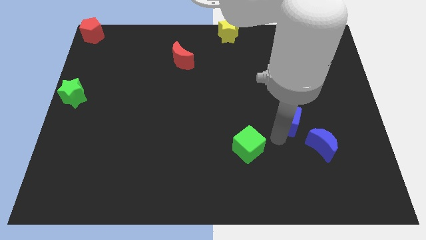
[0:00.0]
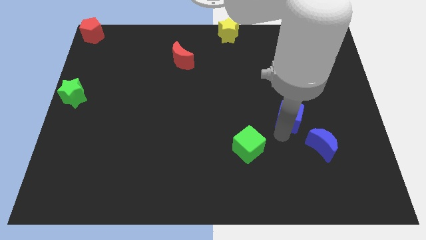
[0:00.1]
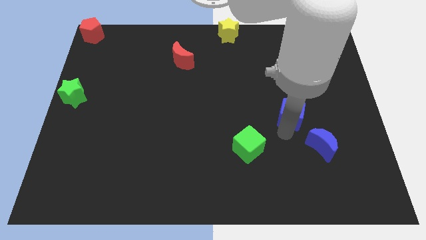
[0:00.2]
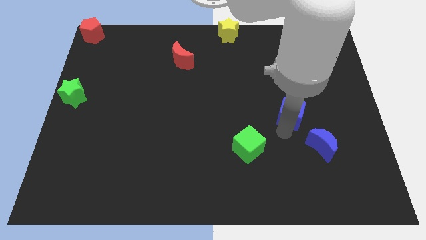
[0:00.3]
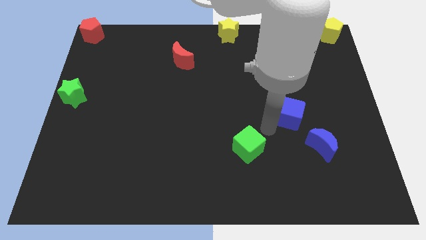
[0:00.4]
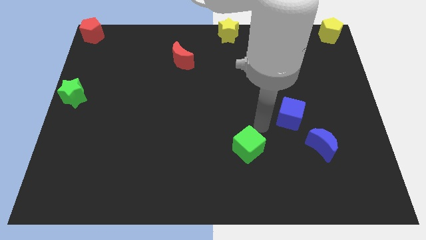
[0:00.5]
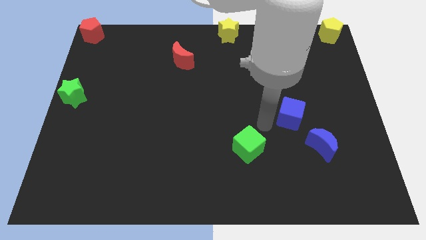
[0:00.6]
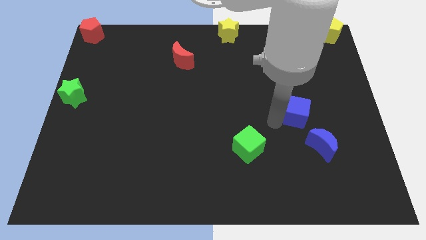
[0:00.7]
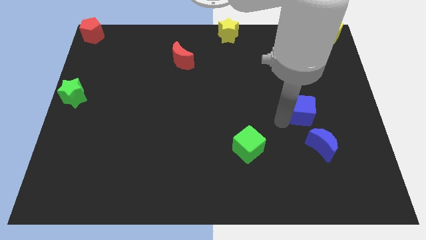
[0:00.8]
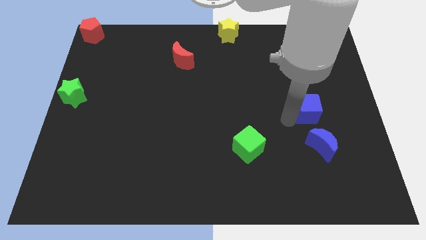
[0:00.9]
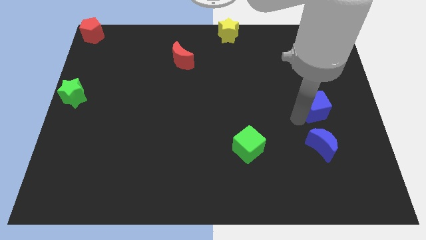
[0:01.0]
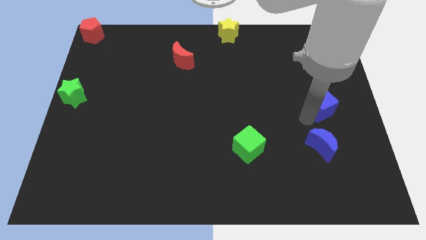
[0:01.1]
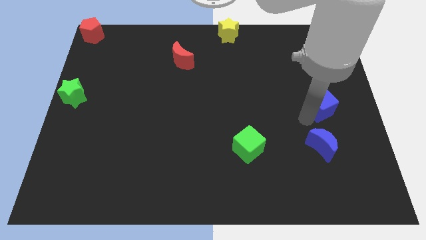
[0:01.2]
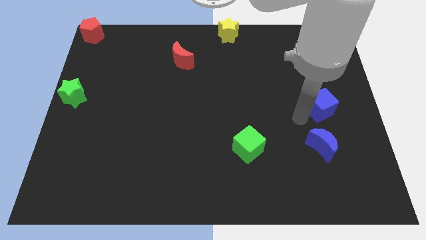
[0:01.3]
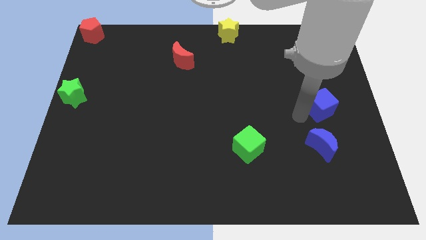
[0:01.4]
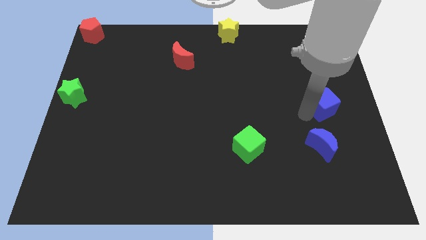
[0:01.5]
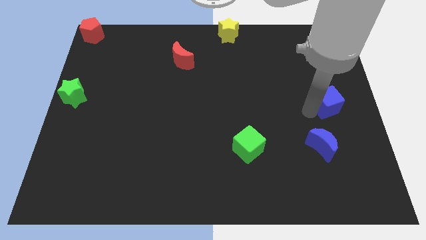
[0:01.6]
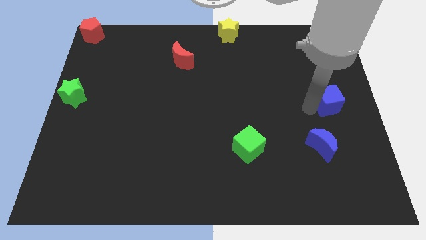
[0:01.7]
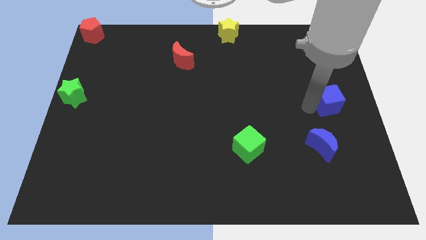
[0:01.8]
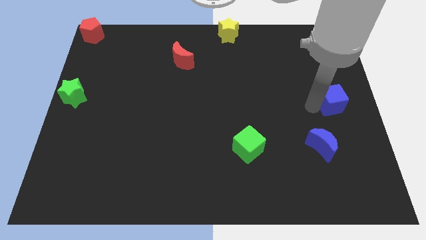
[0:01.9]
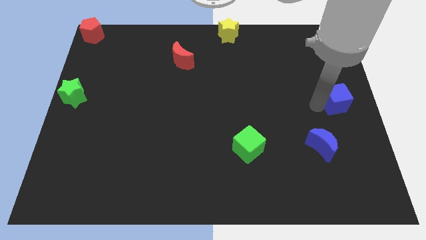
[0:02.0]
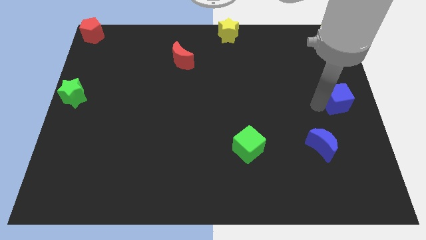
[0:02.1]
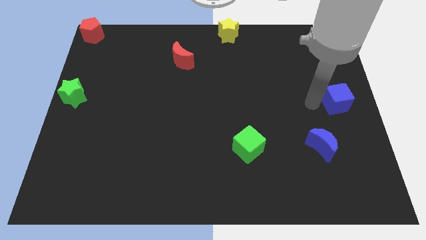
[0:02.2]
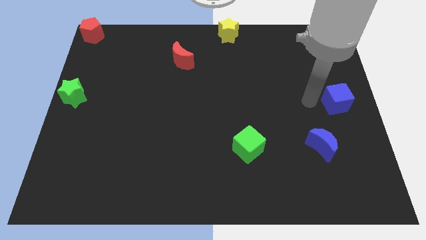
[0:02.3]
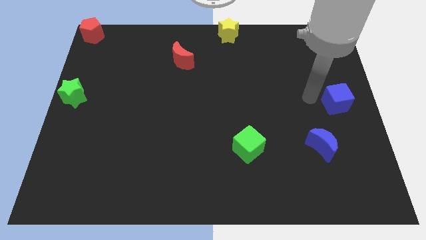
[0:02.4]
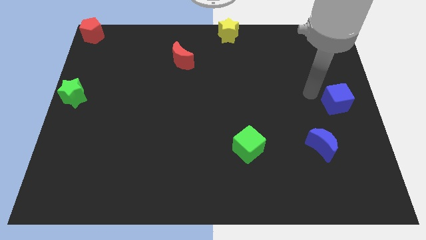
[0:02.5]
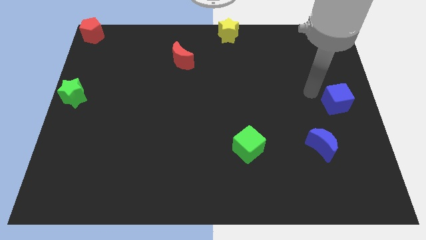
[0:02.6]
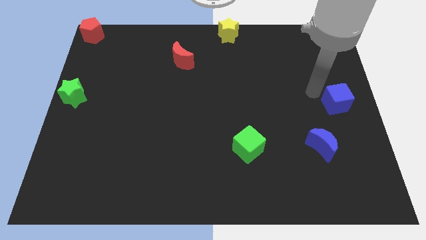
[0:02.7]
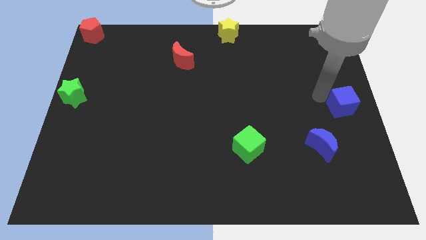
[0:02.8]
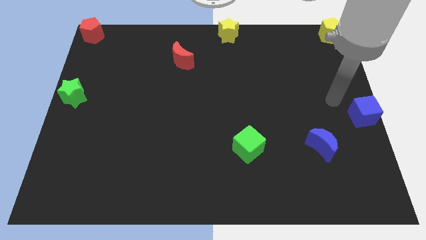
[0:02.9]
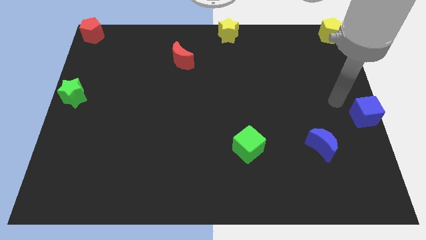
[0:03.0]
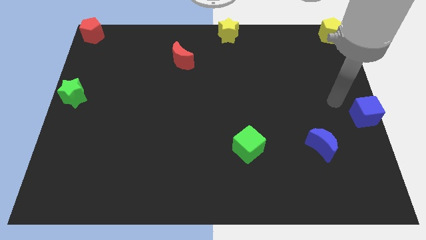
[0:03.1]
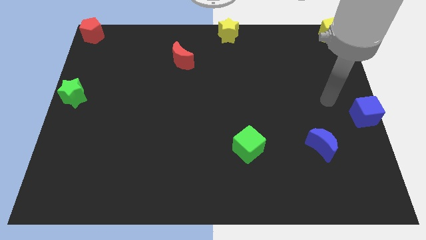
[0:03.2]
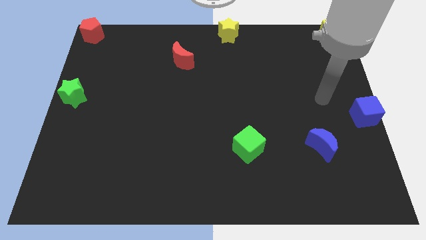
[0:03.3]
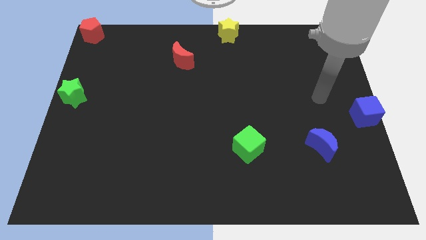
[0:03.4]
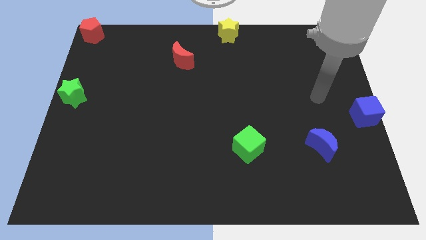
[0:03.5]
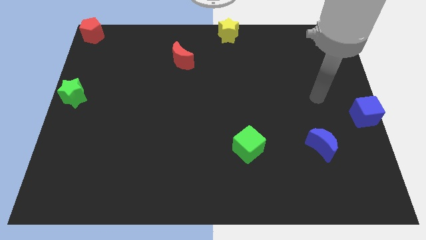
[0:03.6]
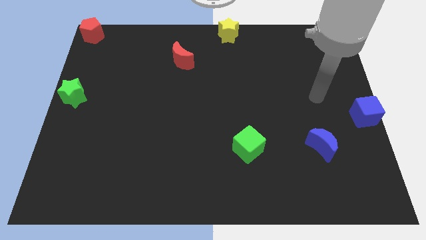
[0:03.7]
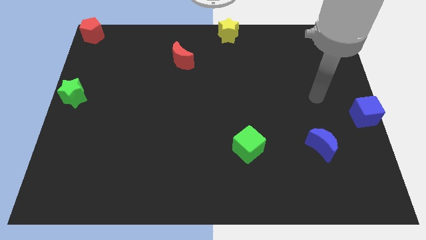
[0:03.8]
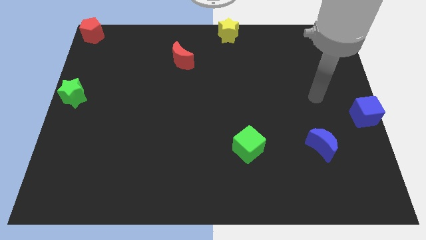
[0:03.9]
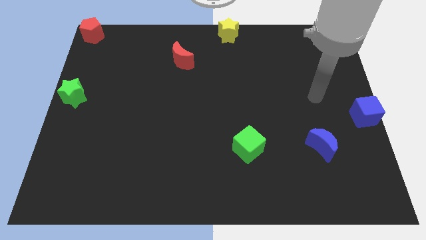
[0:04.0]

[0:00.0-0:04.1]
move the blue cube vertically below the yellow pentagon

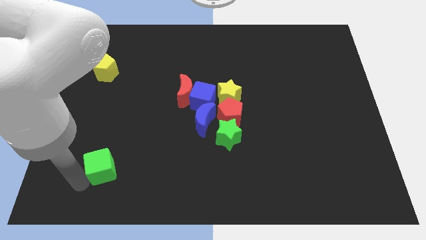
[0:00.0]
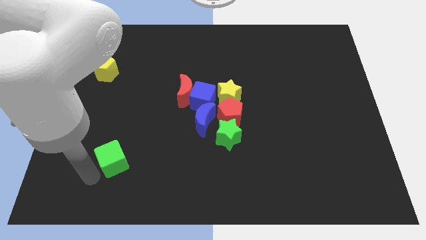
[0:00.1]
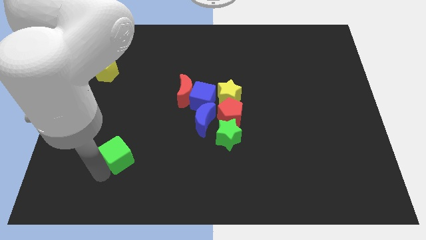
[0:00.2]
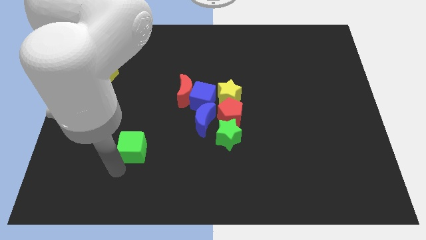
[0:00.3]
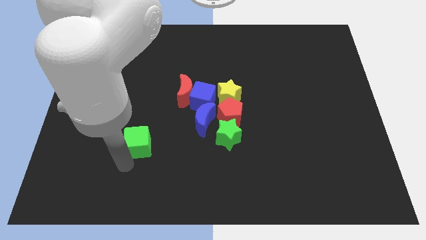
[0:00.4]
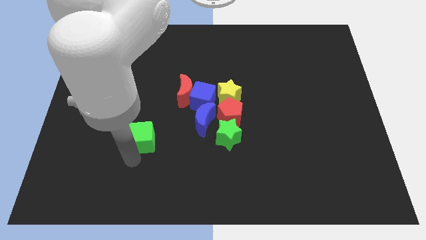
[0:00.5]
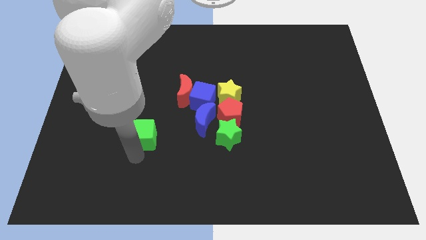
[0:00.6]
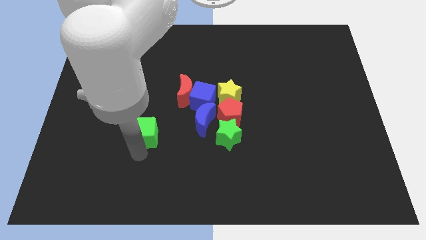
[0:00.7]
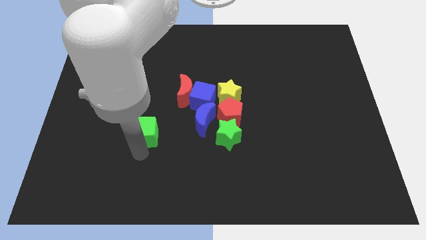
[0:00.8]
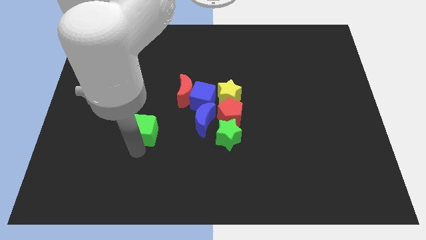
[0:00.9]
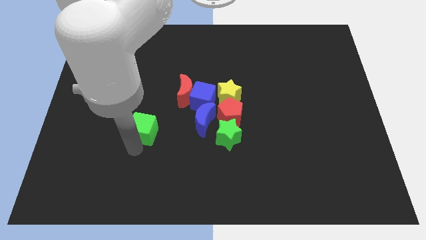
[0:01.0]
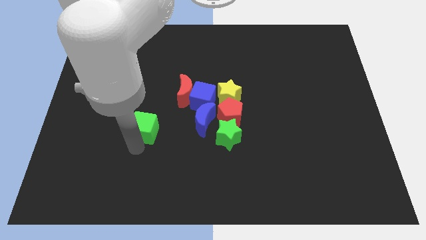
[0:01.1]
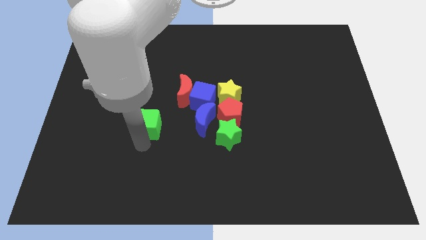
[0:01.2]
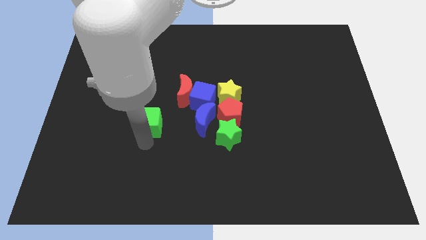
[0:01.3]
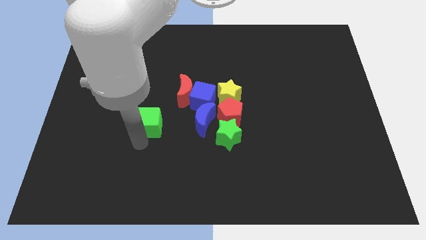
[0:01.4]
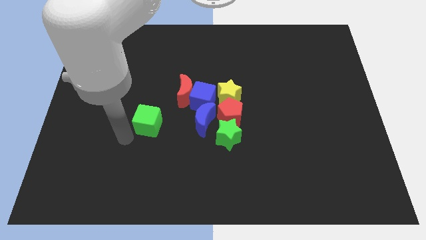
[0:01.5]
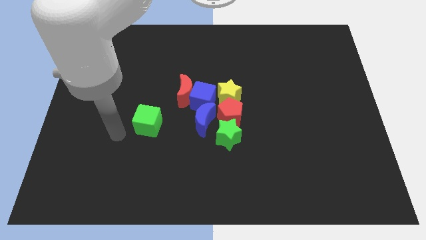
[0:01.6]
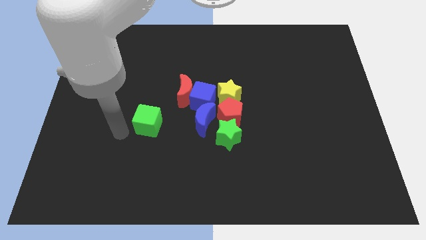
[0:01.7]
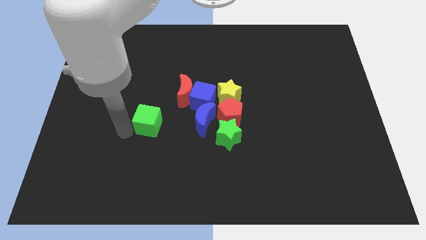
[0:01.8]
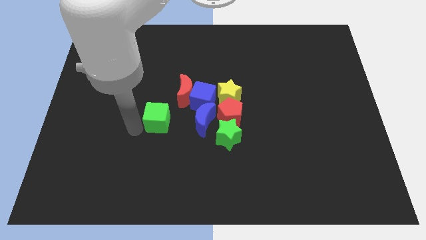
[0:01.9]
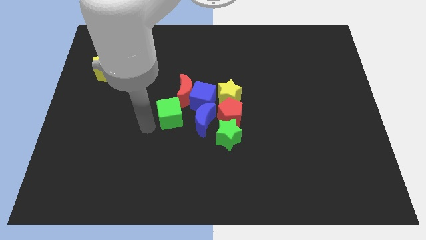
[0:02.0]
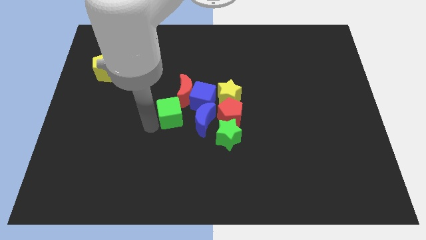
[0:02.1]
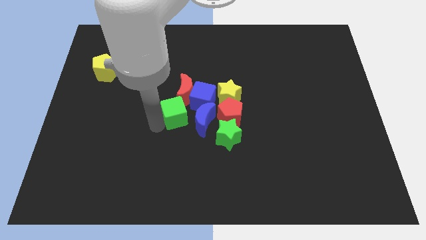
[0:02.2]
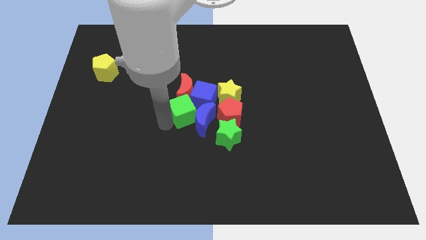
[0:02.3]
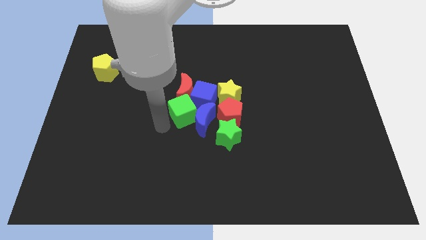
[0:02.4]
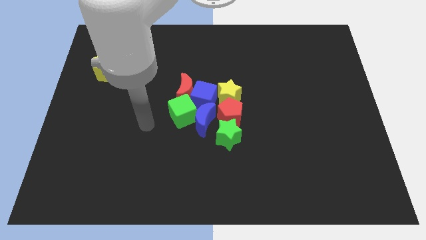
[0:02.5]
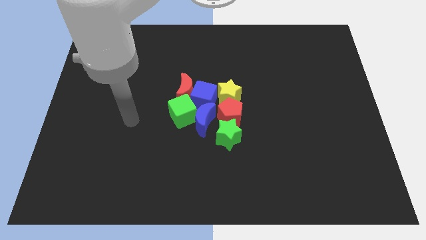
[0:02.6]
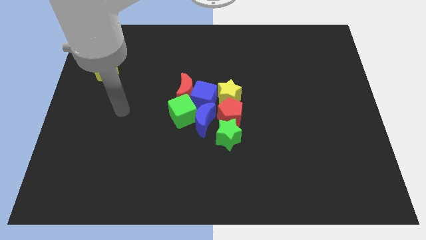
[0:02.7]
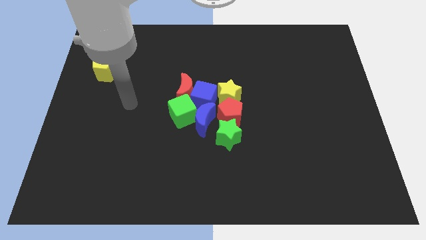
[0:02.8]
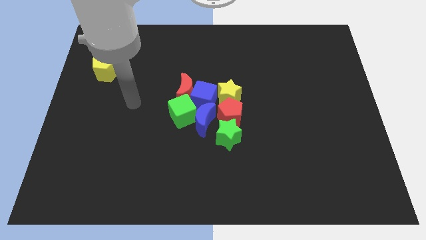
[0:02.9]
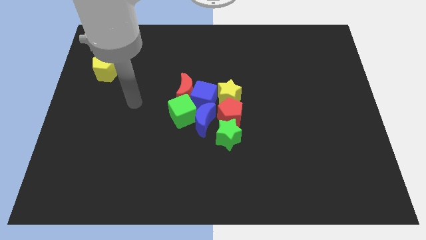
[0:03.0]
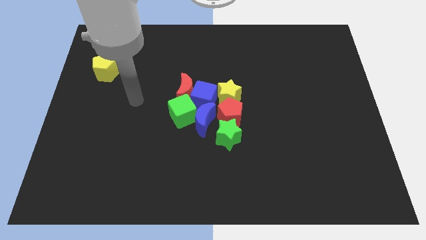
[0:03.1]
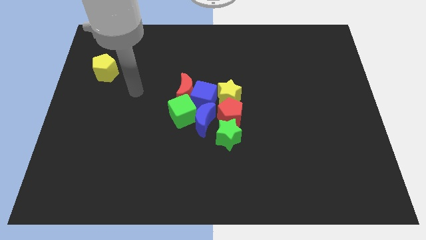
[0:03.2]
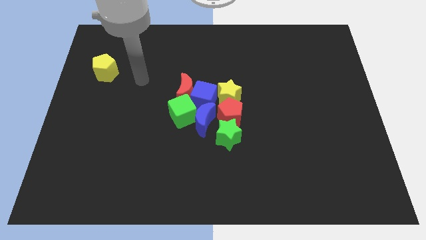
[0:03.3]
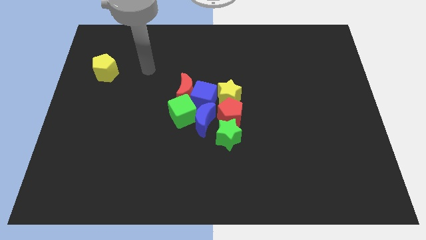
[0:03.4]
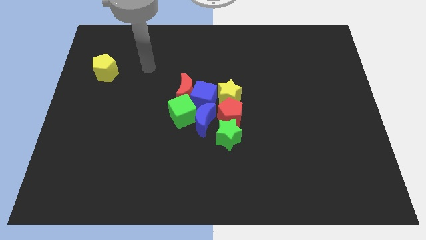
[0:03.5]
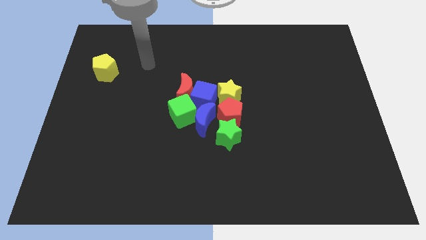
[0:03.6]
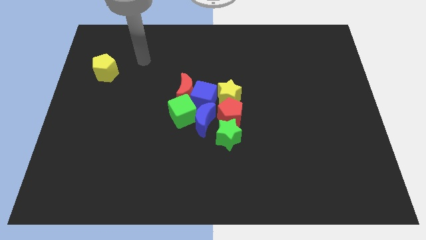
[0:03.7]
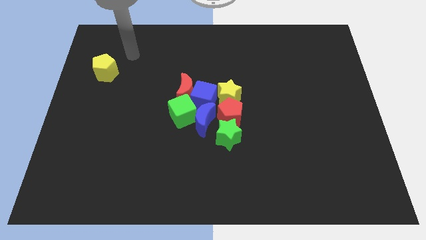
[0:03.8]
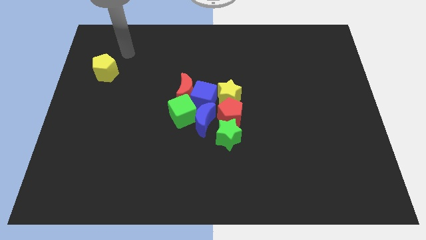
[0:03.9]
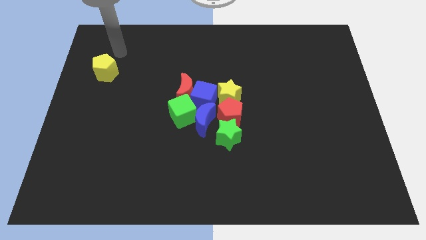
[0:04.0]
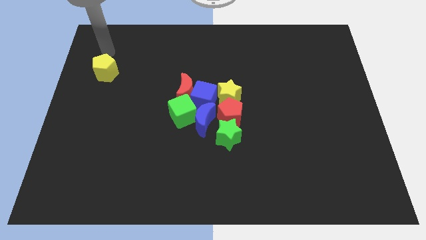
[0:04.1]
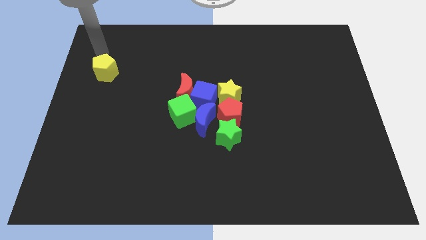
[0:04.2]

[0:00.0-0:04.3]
move the green cube to left side of blue crescent

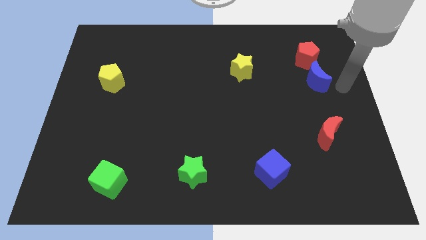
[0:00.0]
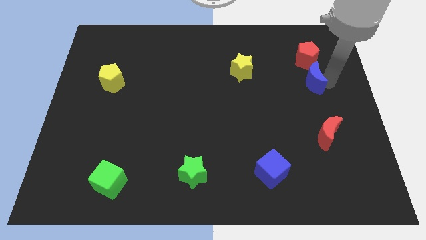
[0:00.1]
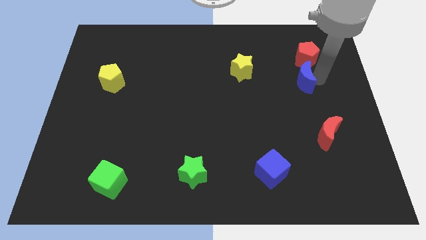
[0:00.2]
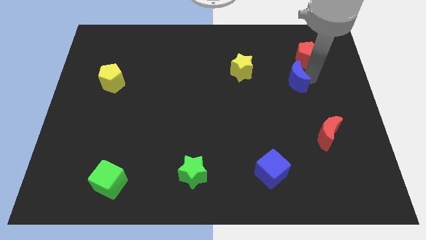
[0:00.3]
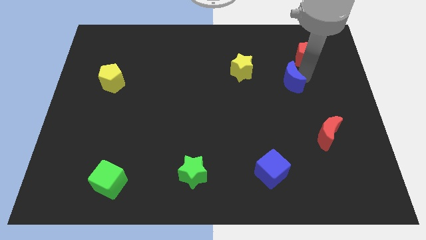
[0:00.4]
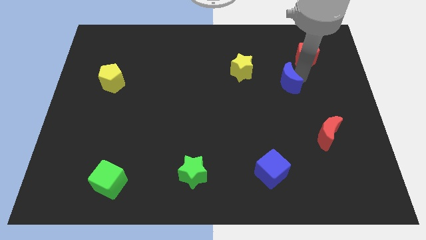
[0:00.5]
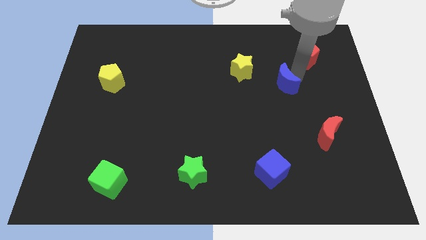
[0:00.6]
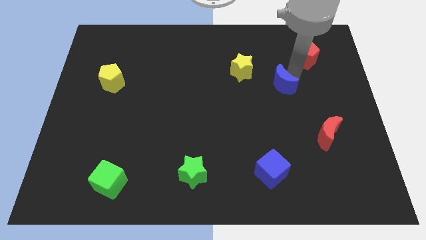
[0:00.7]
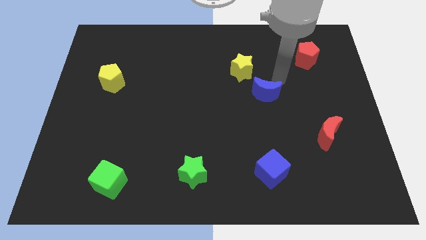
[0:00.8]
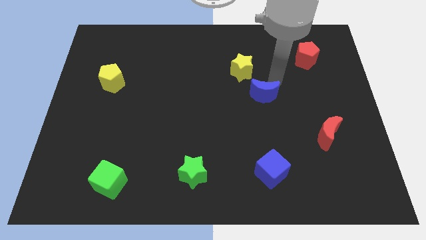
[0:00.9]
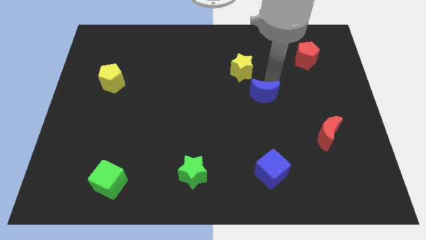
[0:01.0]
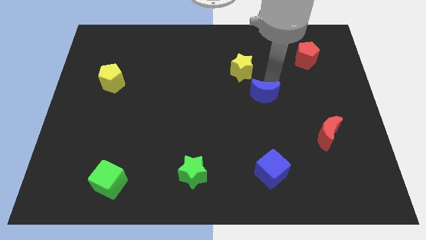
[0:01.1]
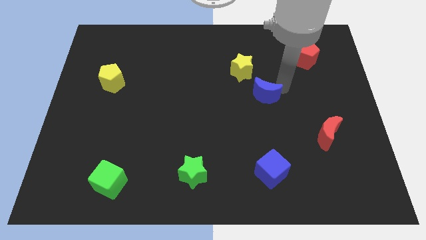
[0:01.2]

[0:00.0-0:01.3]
move the blue moon diagonally bottom right to the yellow star
